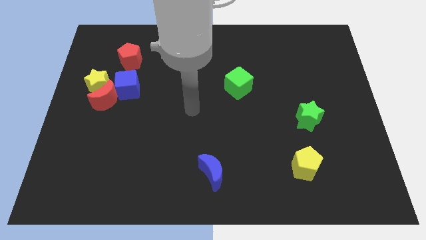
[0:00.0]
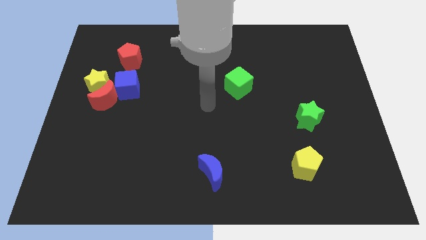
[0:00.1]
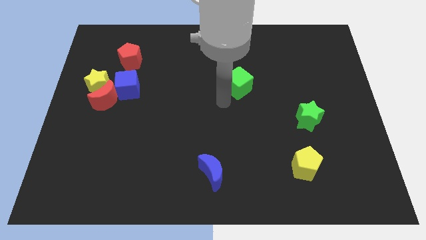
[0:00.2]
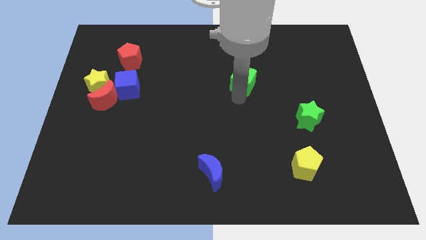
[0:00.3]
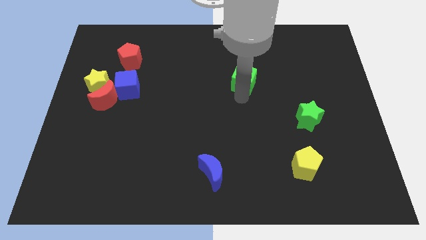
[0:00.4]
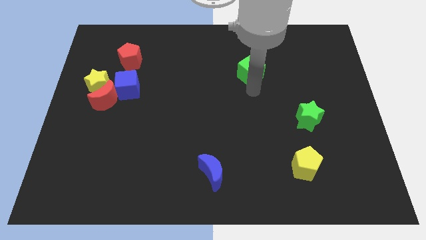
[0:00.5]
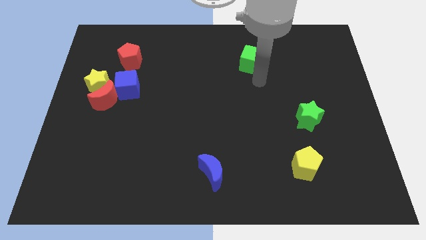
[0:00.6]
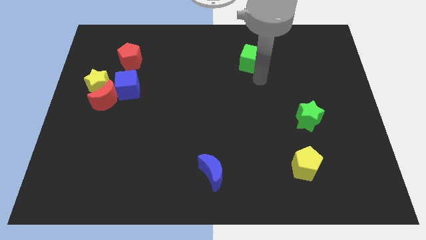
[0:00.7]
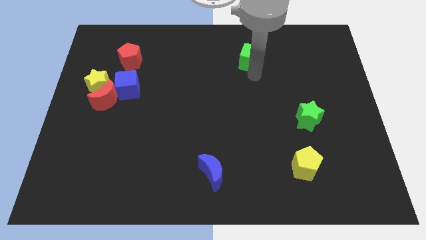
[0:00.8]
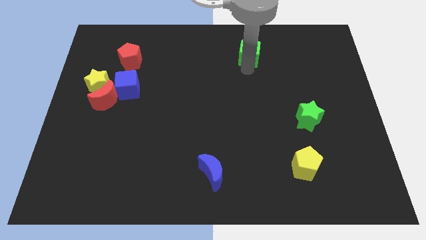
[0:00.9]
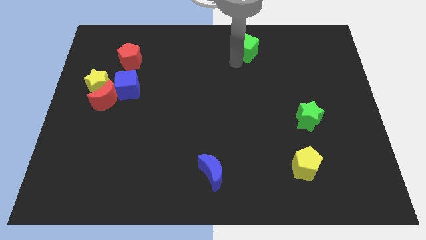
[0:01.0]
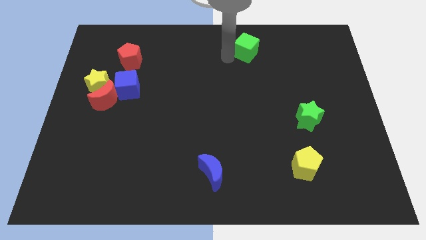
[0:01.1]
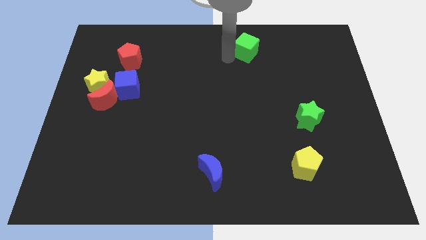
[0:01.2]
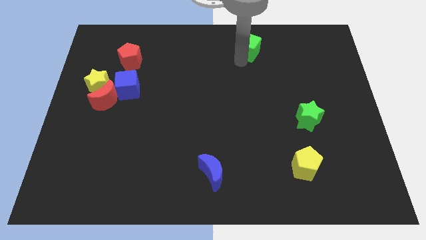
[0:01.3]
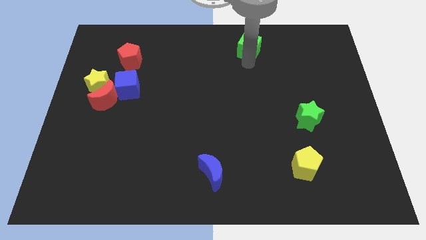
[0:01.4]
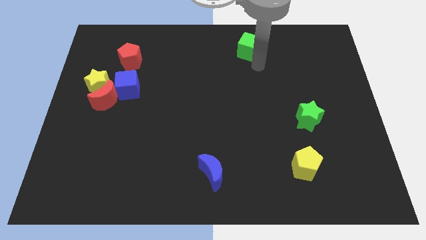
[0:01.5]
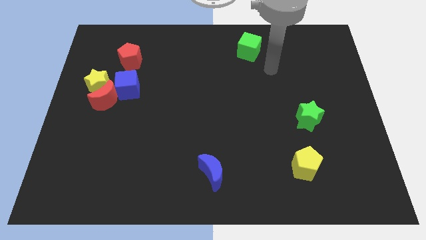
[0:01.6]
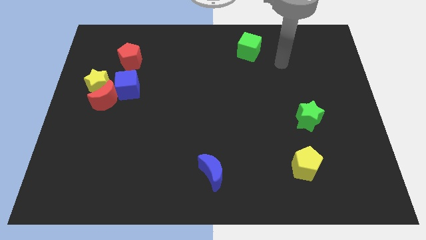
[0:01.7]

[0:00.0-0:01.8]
push the green cube towards the top center

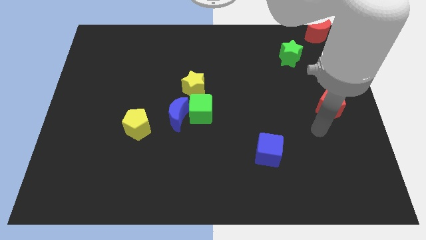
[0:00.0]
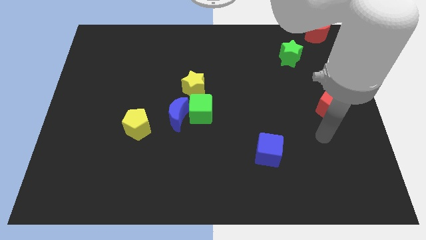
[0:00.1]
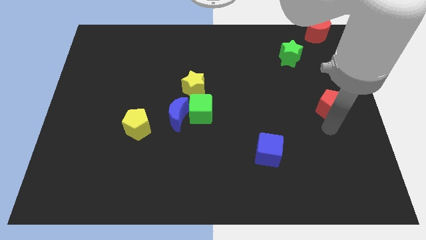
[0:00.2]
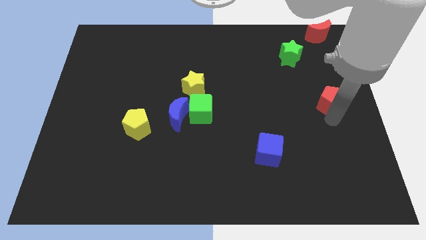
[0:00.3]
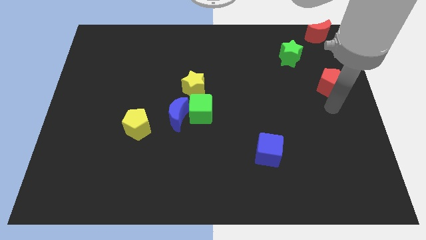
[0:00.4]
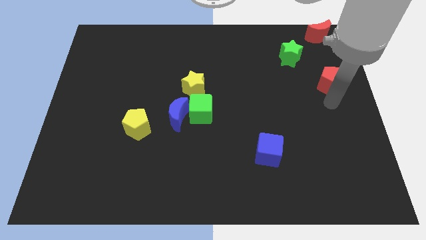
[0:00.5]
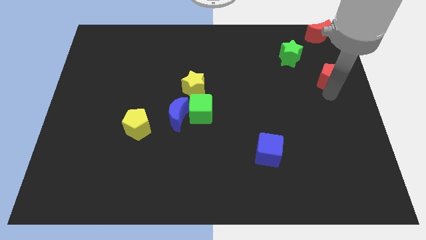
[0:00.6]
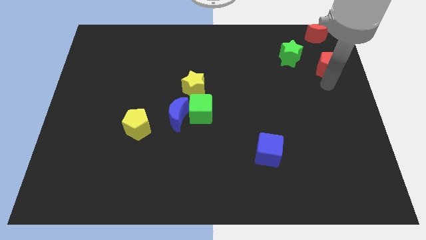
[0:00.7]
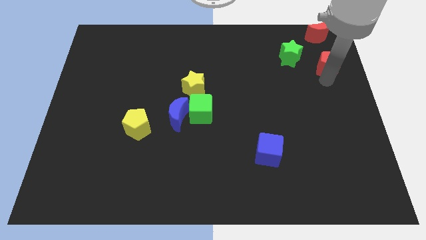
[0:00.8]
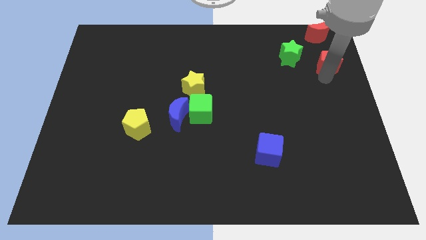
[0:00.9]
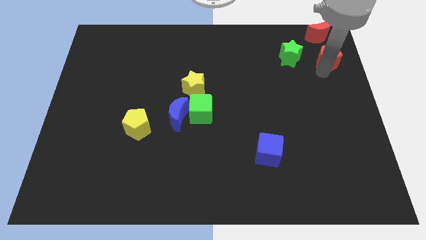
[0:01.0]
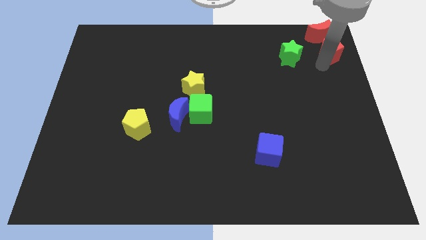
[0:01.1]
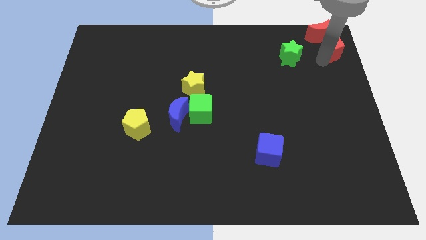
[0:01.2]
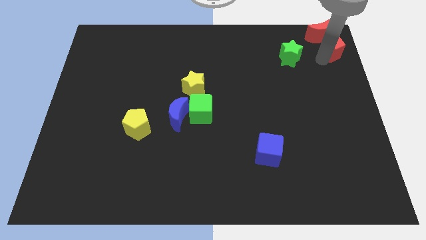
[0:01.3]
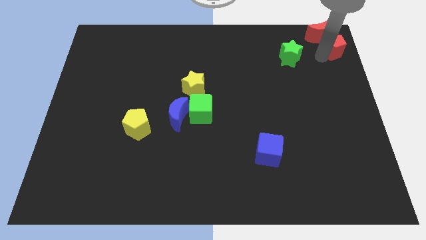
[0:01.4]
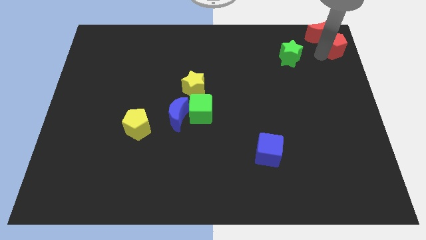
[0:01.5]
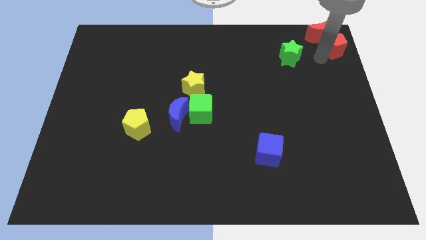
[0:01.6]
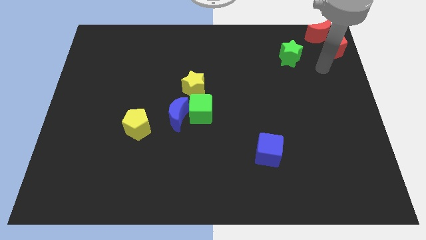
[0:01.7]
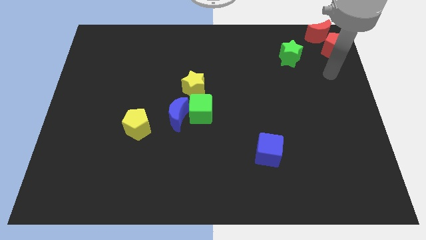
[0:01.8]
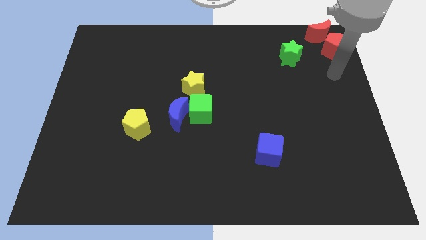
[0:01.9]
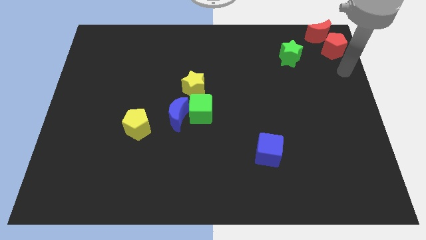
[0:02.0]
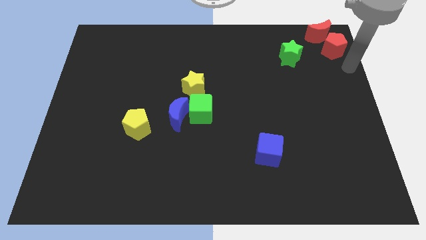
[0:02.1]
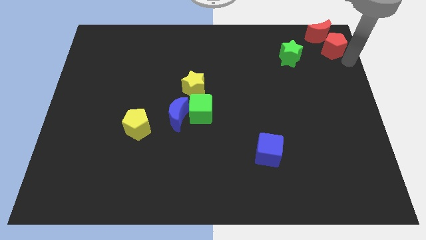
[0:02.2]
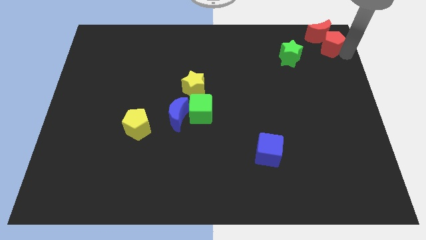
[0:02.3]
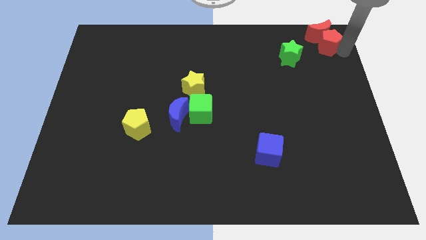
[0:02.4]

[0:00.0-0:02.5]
put the red pentagon into the red moon

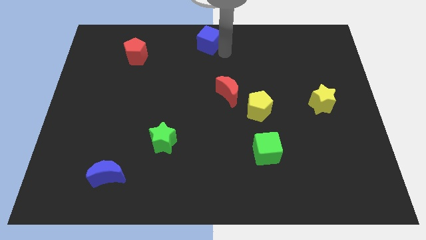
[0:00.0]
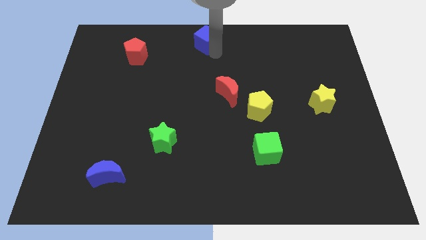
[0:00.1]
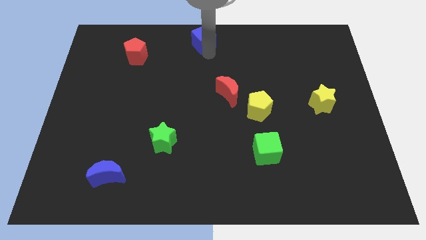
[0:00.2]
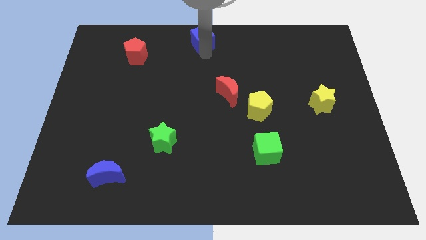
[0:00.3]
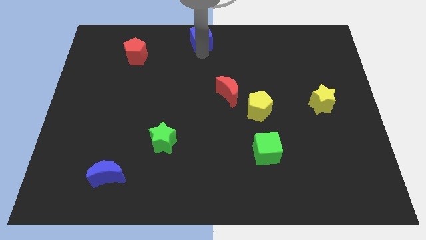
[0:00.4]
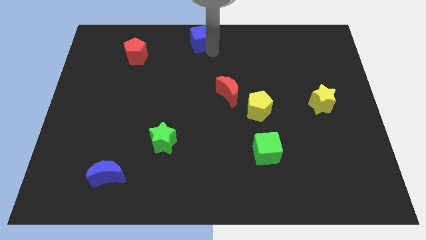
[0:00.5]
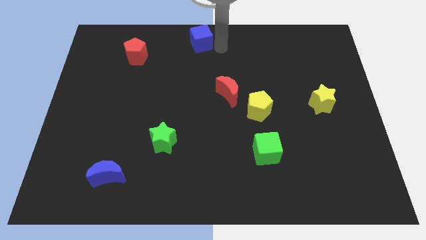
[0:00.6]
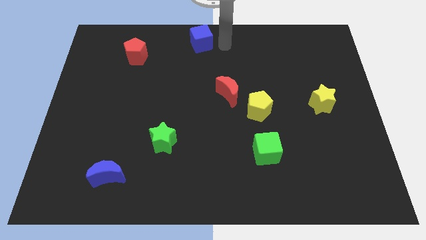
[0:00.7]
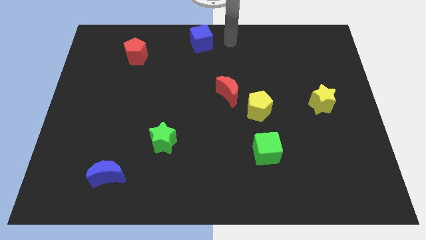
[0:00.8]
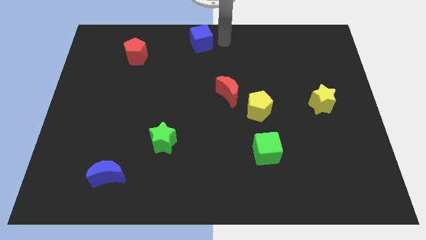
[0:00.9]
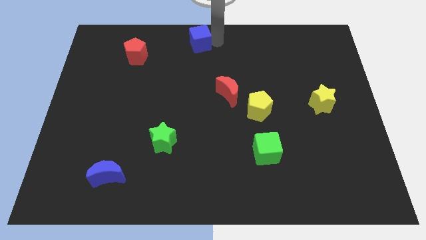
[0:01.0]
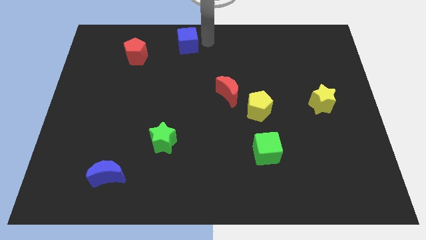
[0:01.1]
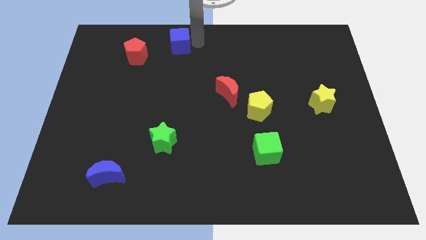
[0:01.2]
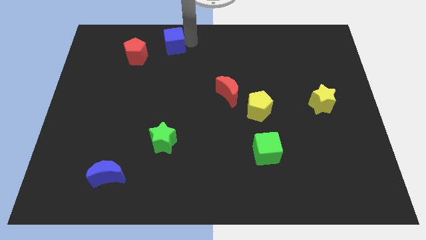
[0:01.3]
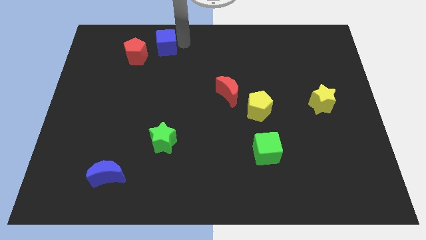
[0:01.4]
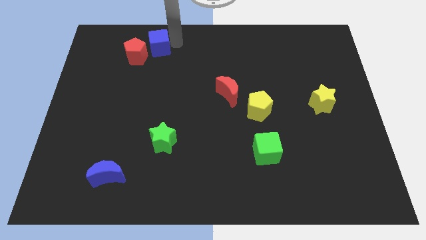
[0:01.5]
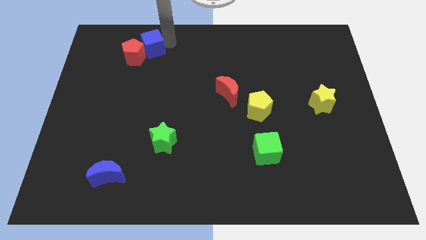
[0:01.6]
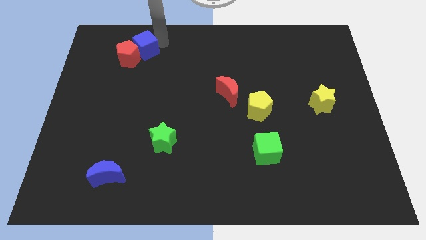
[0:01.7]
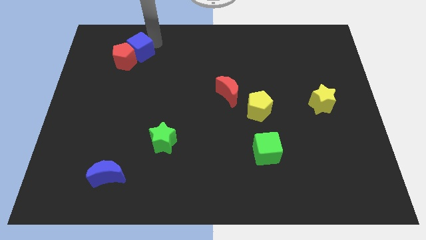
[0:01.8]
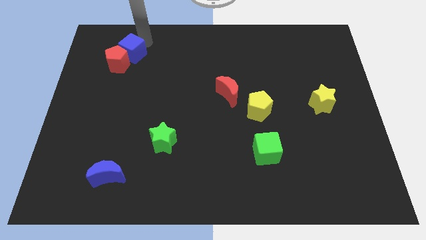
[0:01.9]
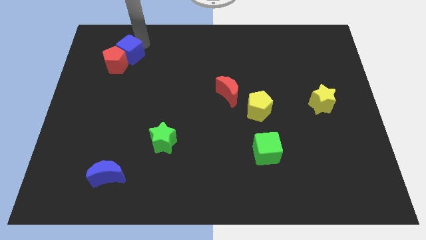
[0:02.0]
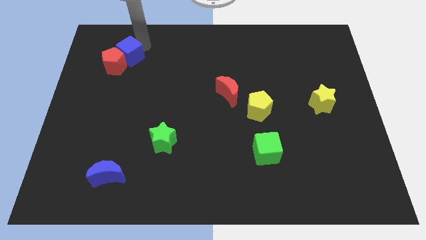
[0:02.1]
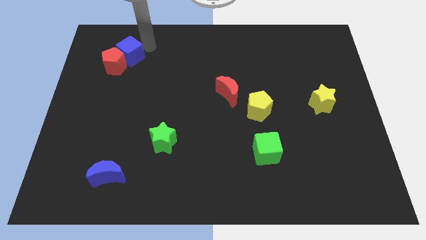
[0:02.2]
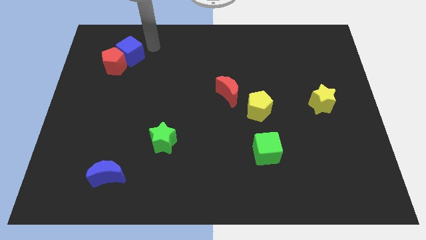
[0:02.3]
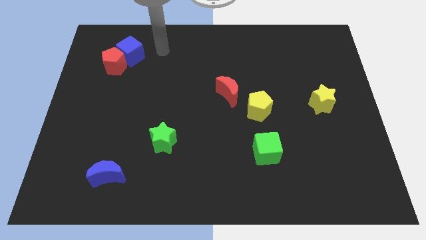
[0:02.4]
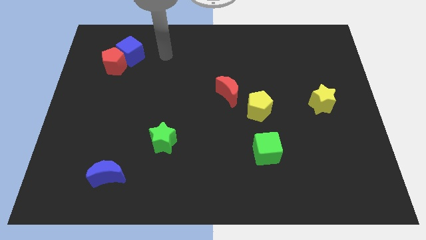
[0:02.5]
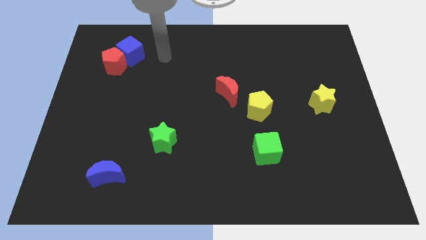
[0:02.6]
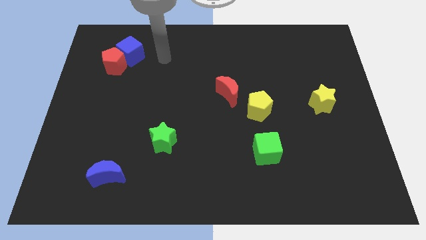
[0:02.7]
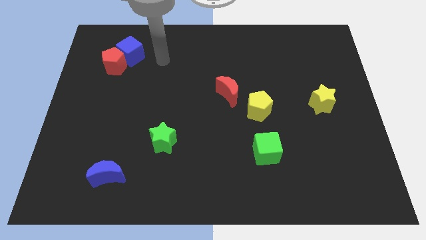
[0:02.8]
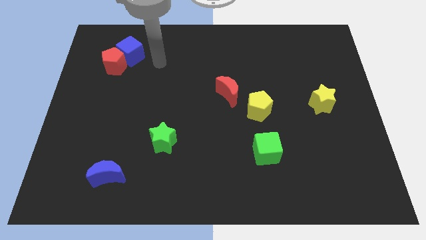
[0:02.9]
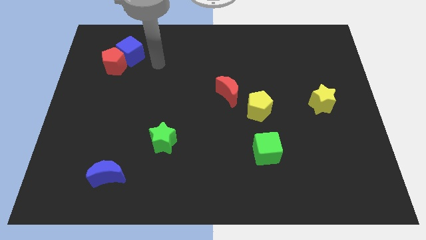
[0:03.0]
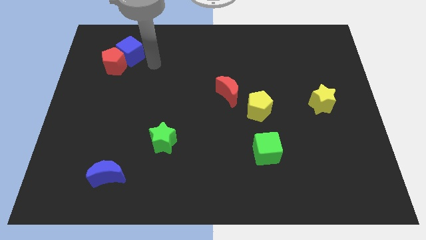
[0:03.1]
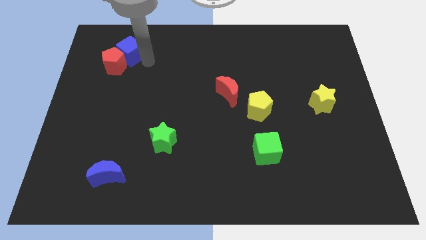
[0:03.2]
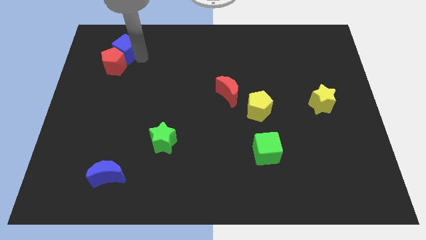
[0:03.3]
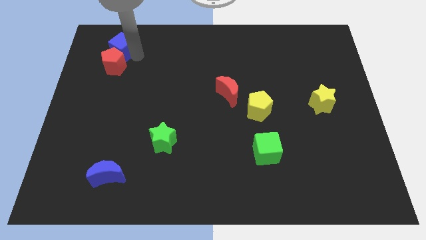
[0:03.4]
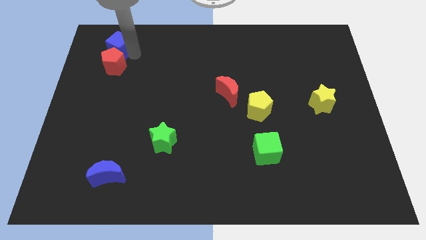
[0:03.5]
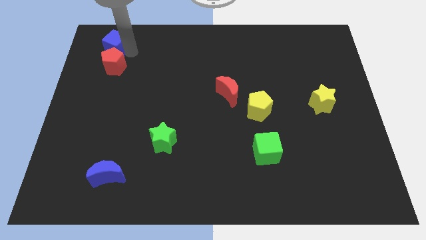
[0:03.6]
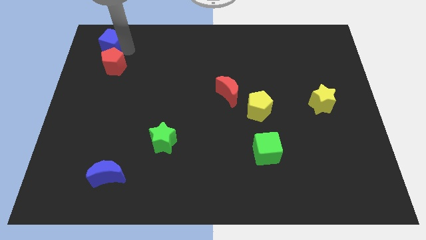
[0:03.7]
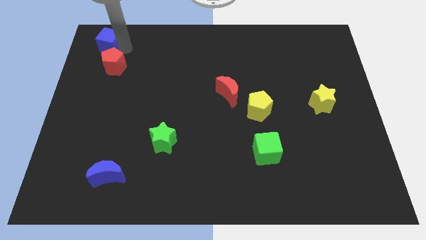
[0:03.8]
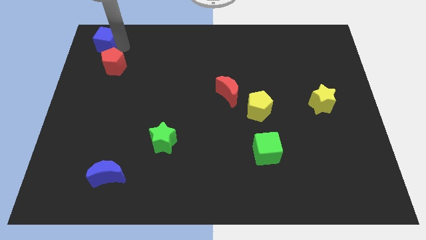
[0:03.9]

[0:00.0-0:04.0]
push the blue cube into the red pentagon

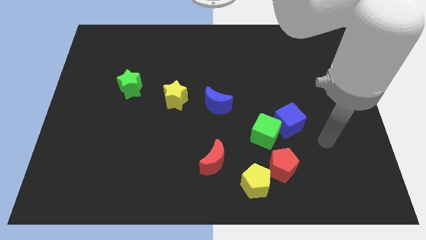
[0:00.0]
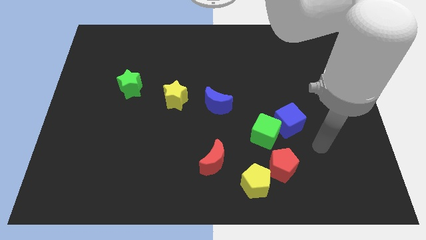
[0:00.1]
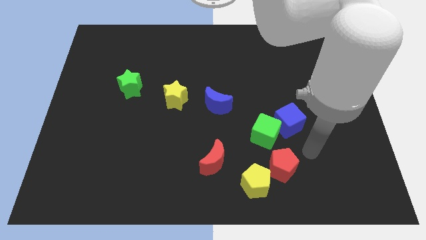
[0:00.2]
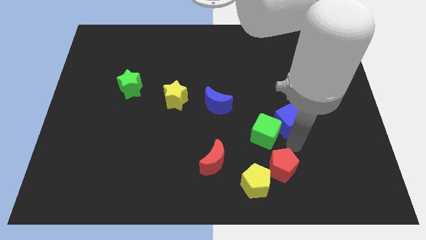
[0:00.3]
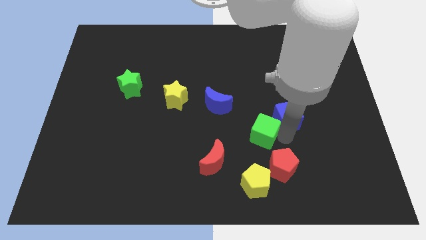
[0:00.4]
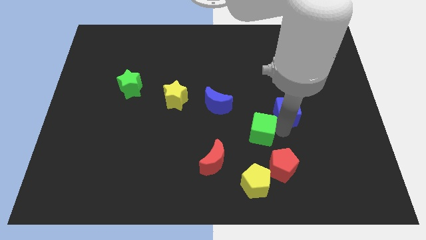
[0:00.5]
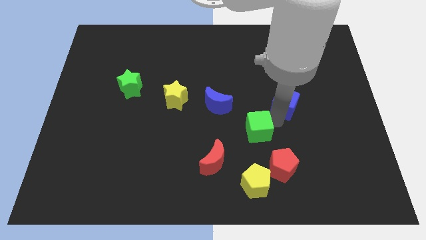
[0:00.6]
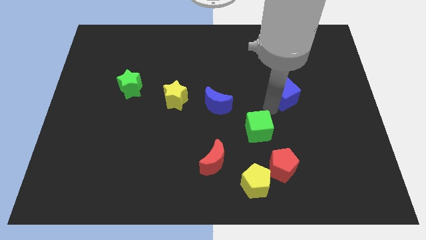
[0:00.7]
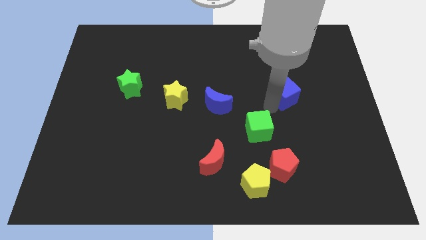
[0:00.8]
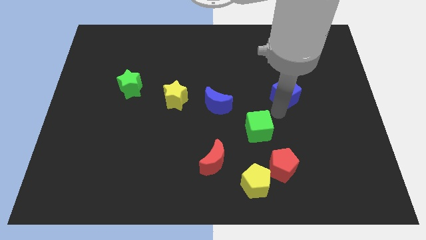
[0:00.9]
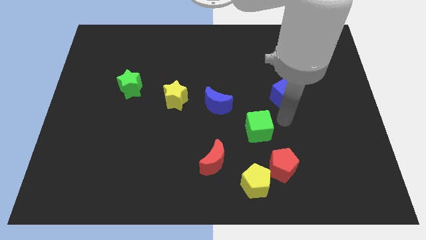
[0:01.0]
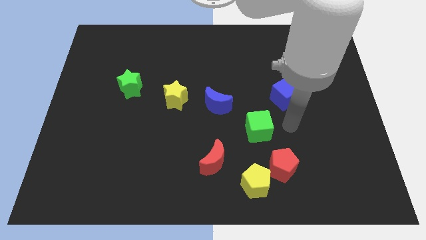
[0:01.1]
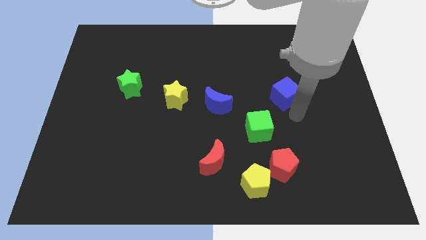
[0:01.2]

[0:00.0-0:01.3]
separate the green cube and blue cube from each other
